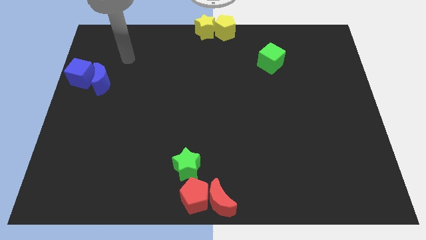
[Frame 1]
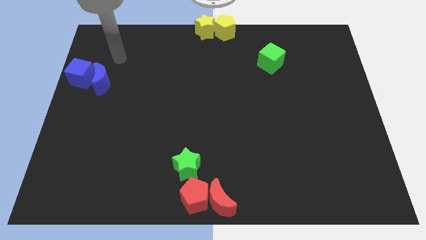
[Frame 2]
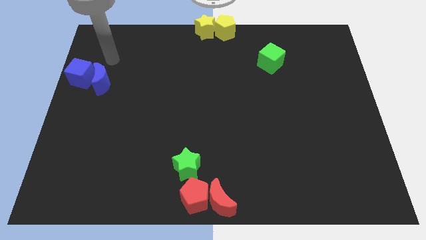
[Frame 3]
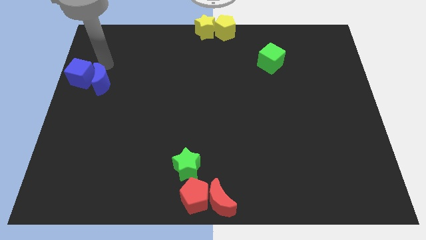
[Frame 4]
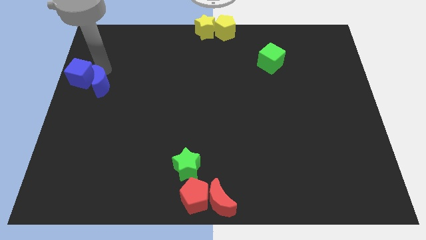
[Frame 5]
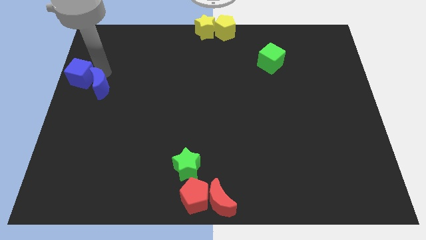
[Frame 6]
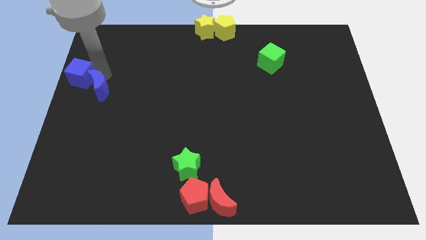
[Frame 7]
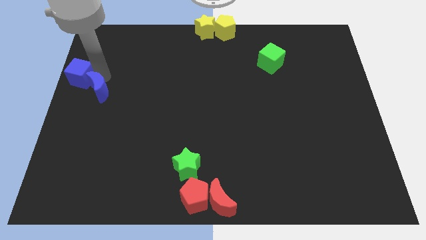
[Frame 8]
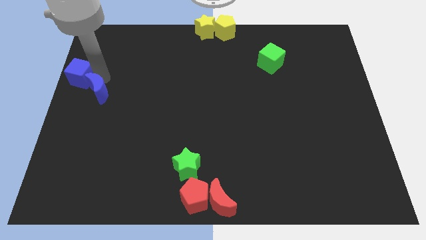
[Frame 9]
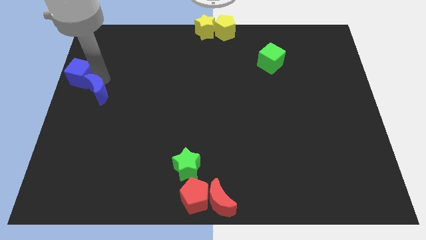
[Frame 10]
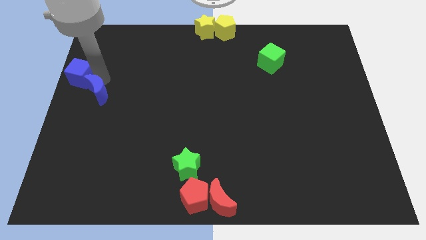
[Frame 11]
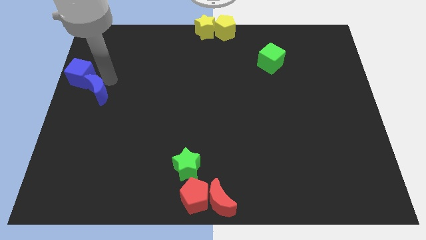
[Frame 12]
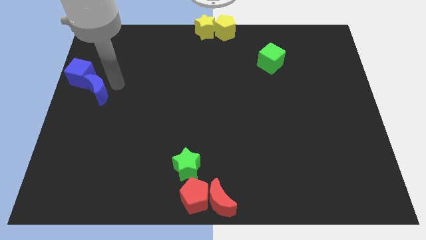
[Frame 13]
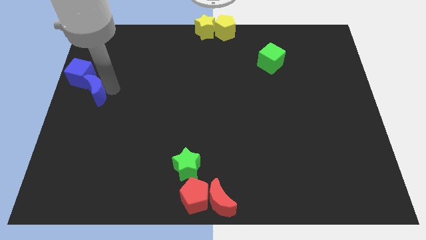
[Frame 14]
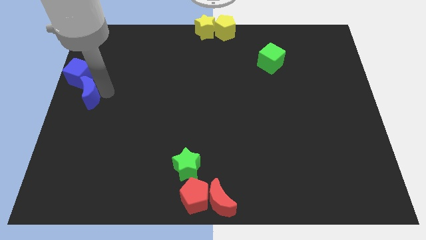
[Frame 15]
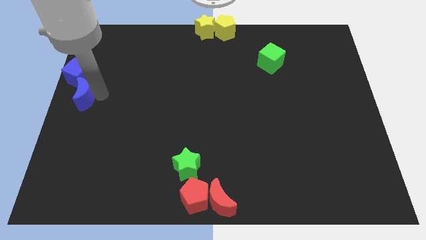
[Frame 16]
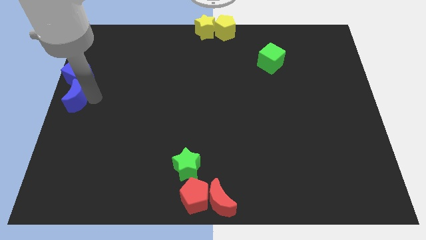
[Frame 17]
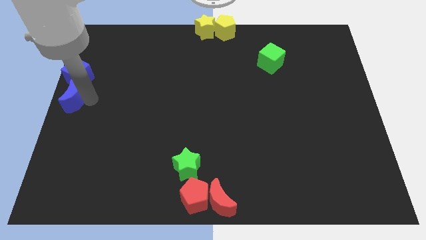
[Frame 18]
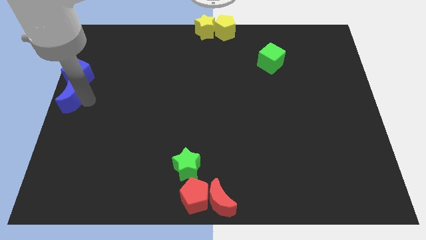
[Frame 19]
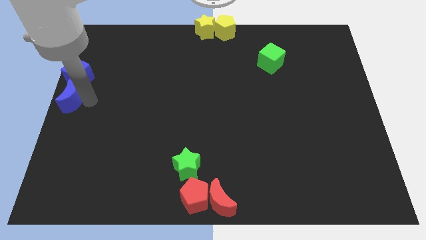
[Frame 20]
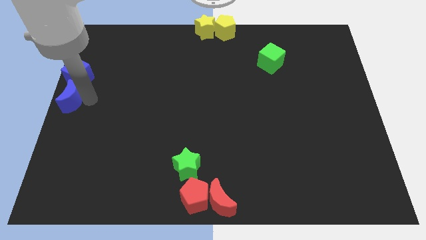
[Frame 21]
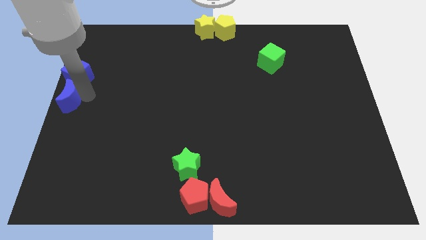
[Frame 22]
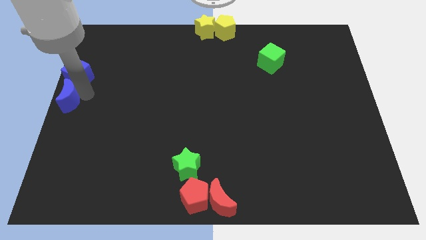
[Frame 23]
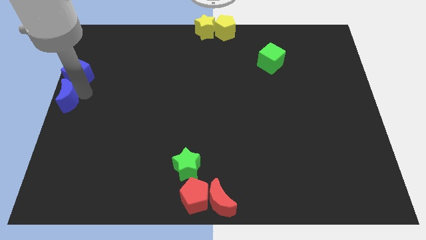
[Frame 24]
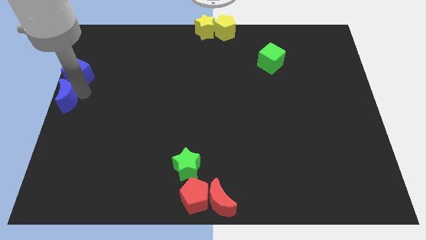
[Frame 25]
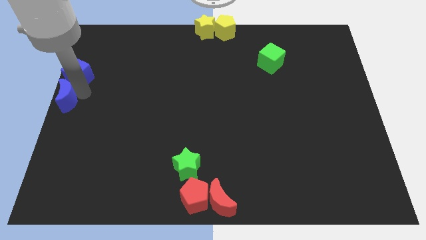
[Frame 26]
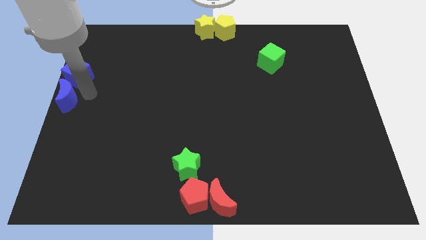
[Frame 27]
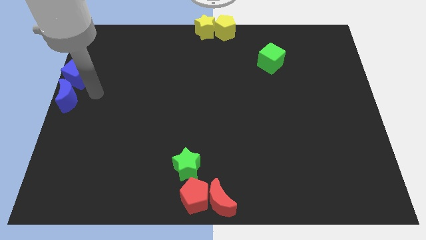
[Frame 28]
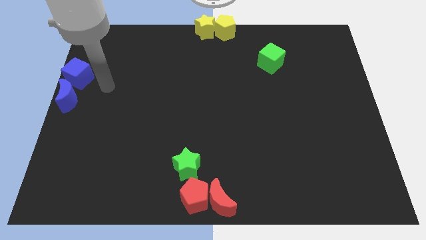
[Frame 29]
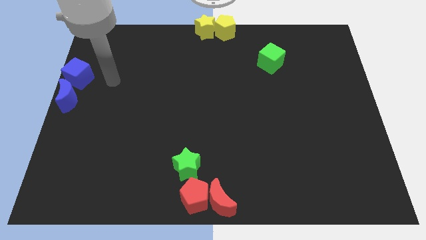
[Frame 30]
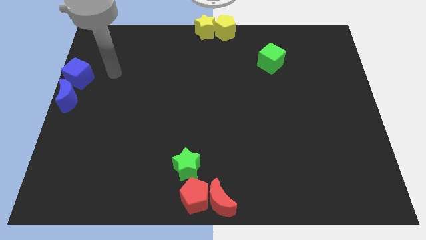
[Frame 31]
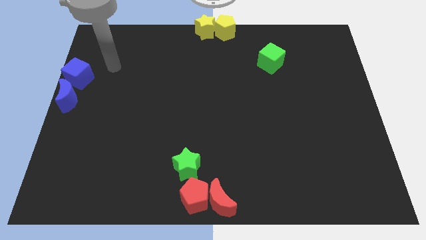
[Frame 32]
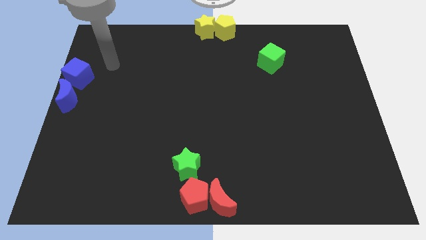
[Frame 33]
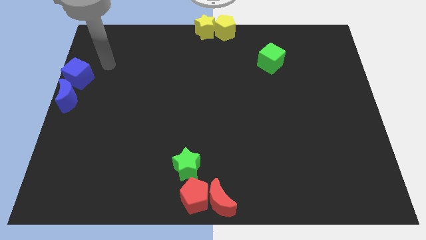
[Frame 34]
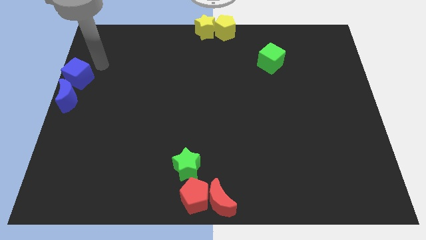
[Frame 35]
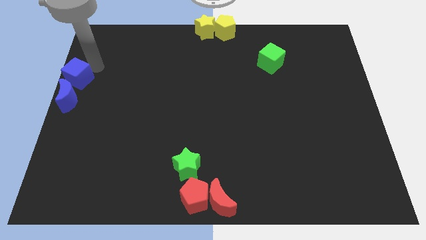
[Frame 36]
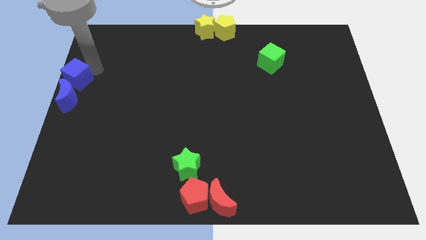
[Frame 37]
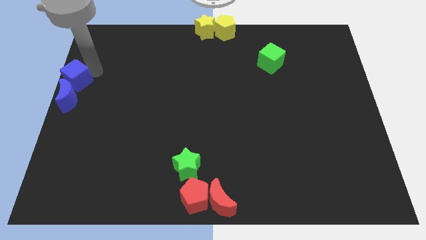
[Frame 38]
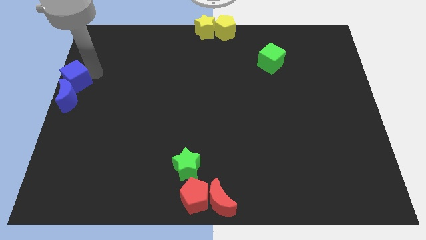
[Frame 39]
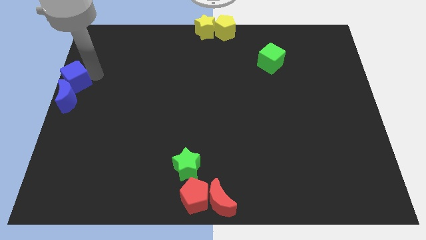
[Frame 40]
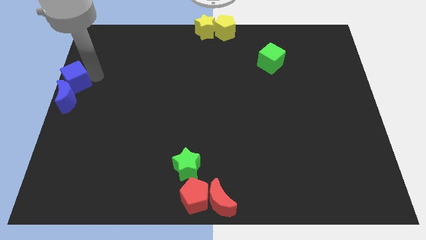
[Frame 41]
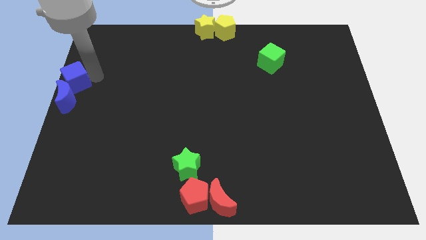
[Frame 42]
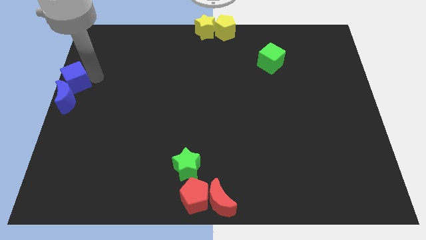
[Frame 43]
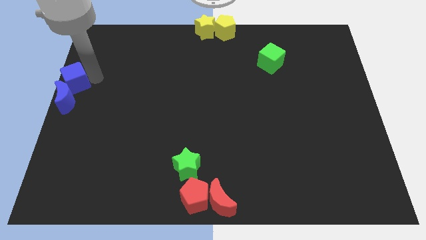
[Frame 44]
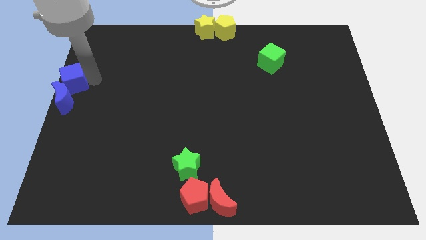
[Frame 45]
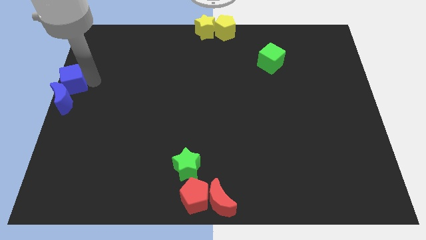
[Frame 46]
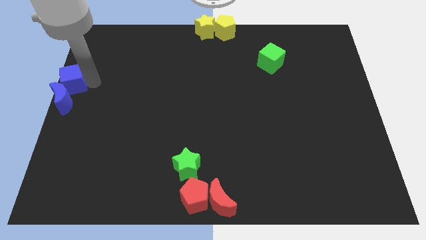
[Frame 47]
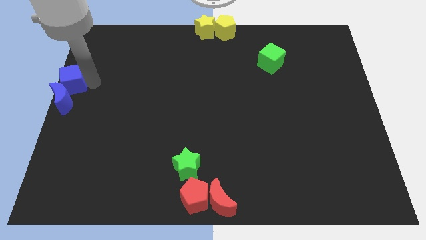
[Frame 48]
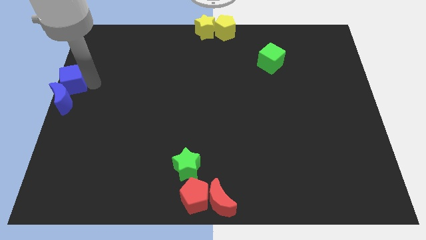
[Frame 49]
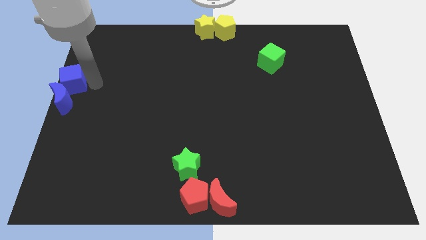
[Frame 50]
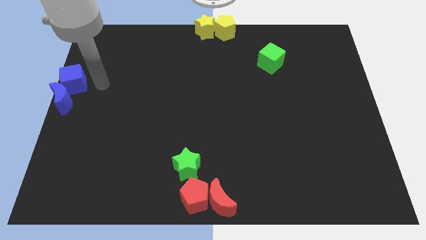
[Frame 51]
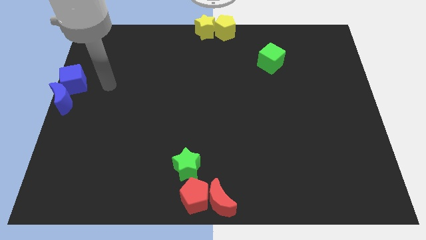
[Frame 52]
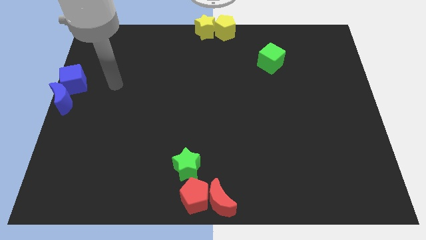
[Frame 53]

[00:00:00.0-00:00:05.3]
place the blue moon and blue cube to the center left of the board

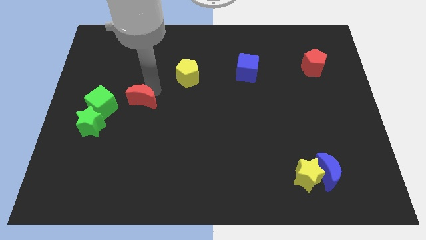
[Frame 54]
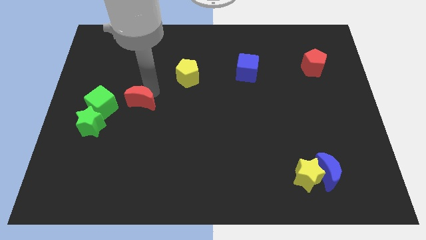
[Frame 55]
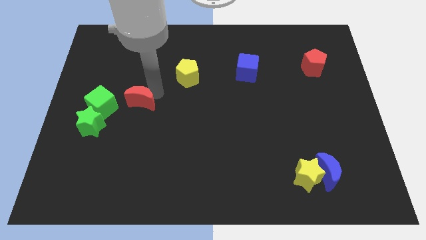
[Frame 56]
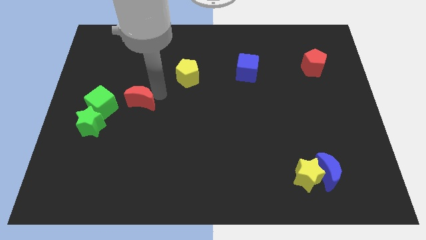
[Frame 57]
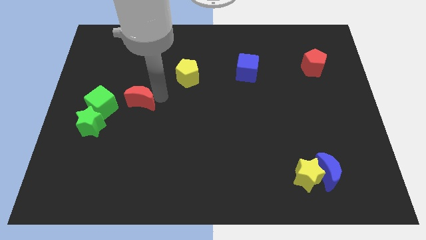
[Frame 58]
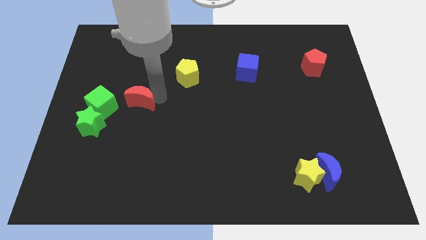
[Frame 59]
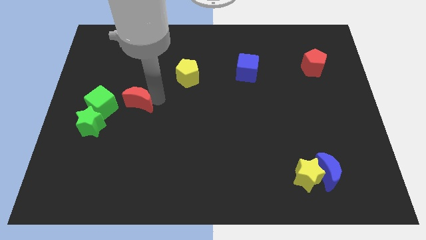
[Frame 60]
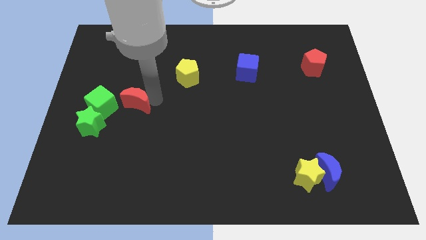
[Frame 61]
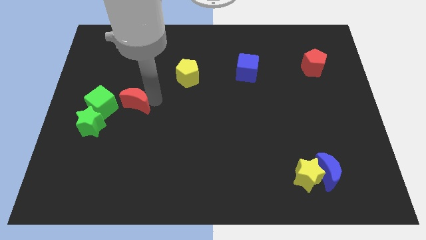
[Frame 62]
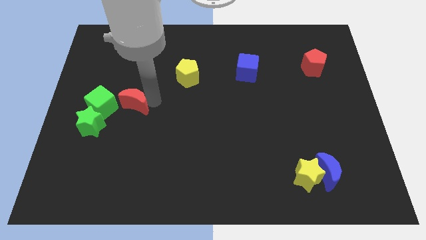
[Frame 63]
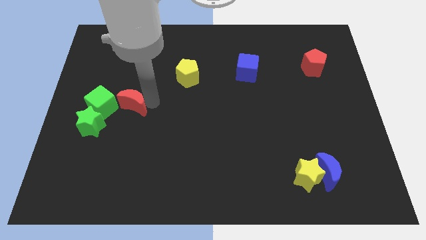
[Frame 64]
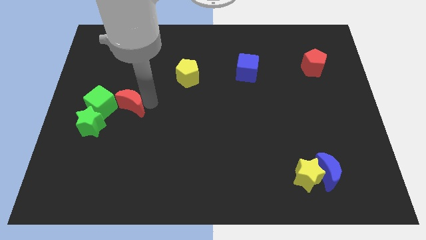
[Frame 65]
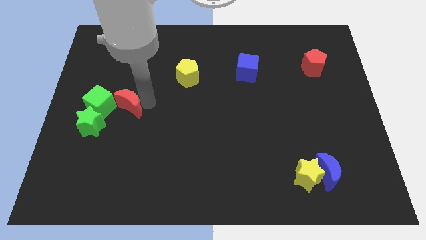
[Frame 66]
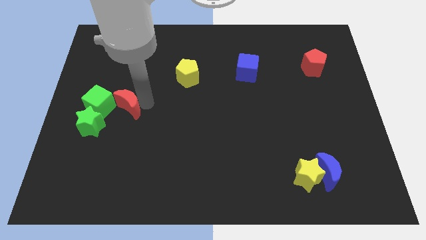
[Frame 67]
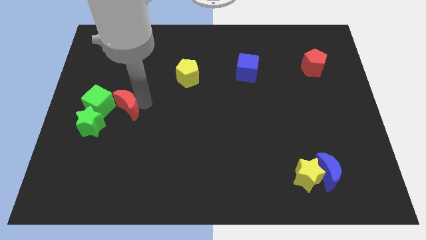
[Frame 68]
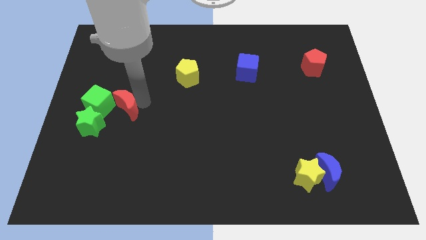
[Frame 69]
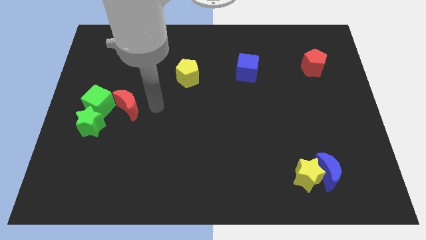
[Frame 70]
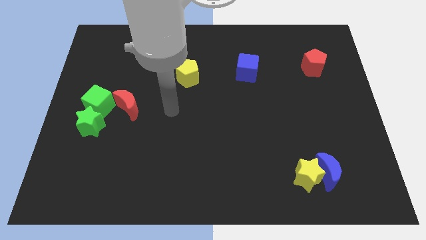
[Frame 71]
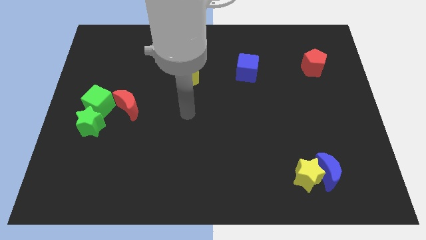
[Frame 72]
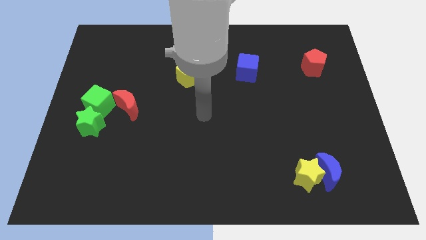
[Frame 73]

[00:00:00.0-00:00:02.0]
push red moon into the green cube

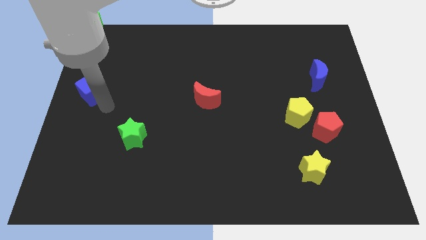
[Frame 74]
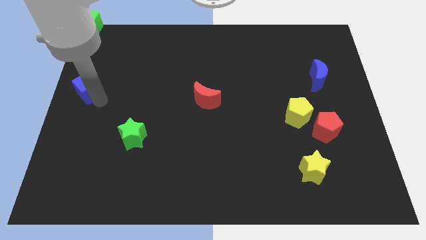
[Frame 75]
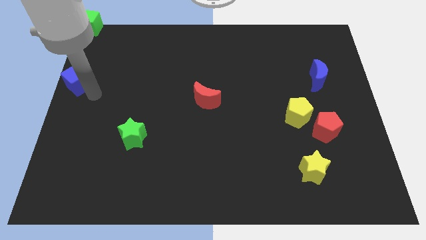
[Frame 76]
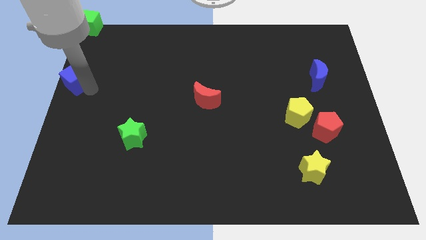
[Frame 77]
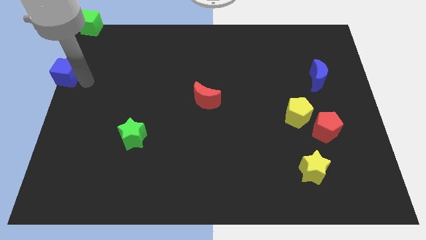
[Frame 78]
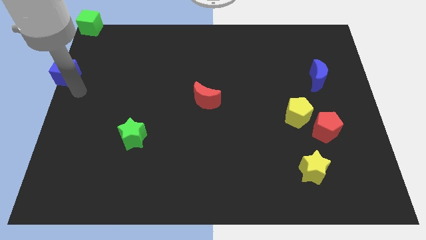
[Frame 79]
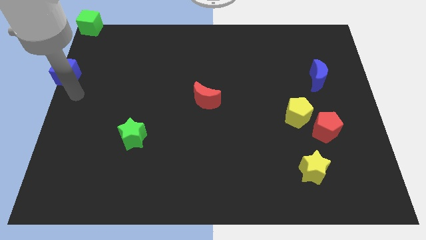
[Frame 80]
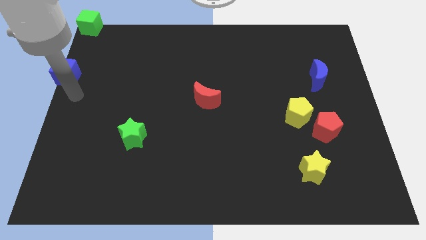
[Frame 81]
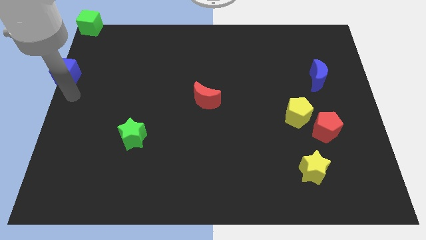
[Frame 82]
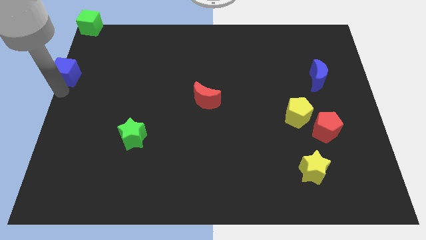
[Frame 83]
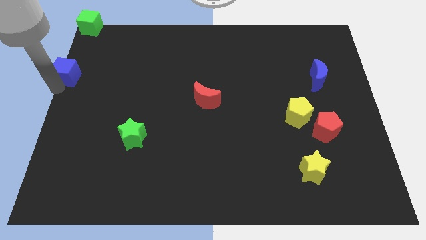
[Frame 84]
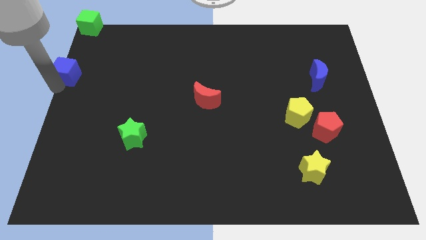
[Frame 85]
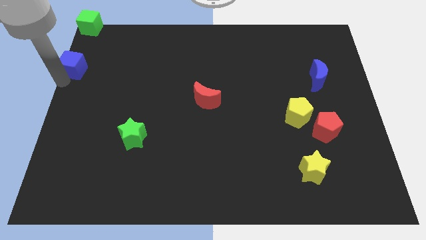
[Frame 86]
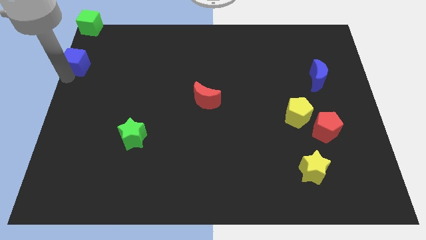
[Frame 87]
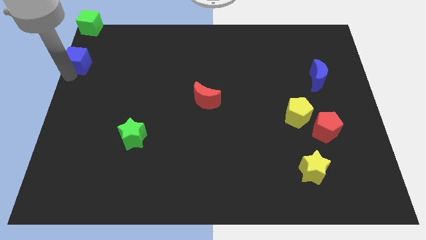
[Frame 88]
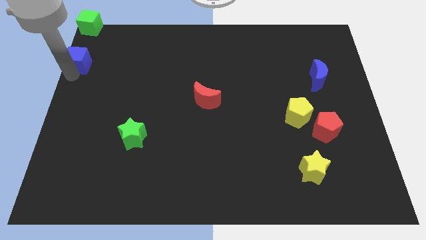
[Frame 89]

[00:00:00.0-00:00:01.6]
move the blue cube to the bottom of the green cube
